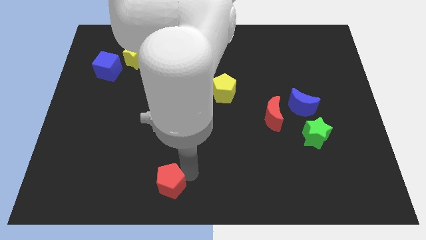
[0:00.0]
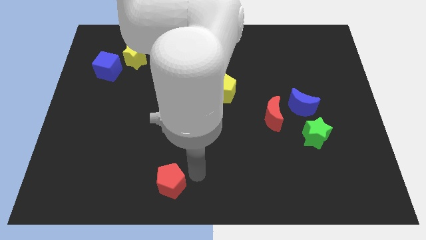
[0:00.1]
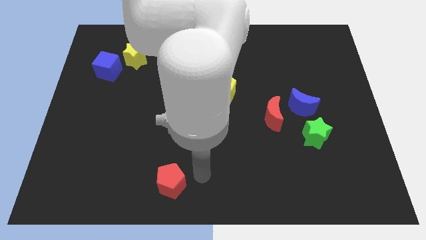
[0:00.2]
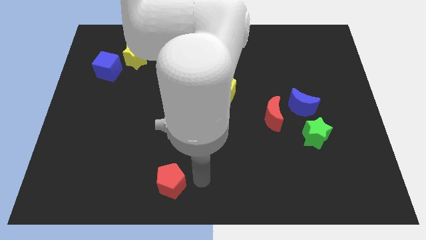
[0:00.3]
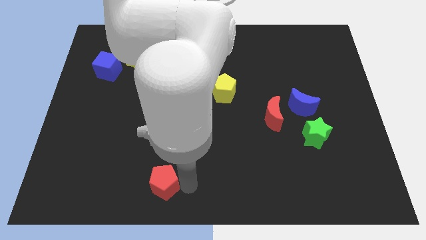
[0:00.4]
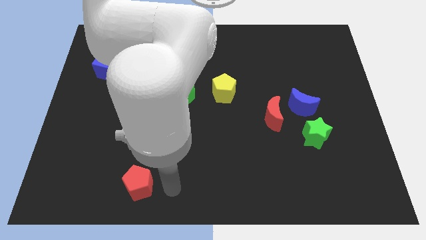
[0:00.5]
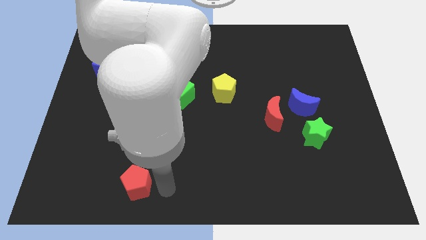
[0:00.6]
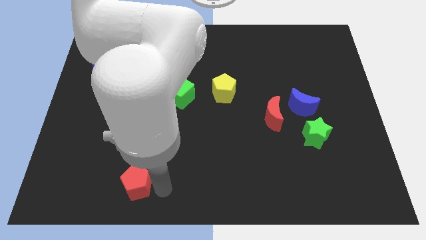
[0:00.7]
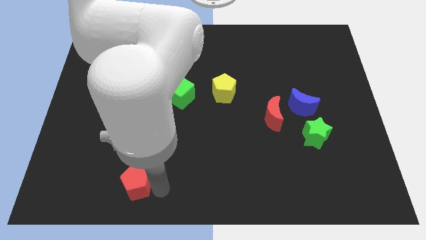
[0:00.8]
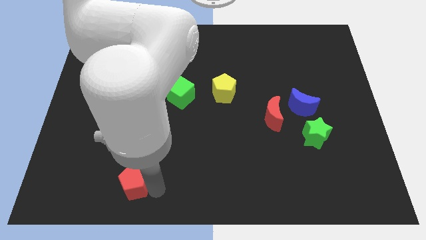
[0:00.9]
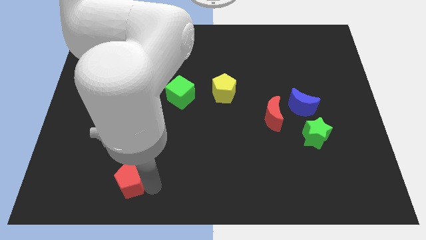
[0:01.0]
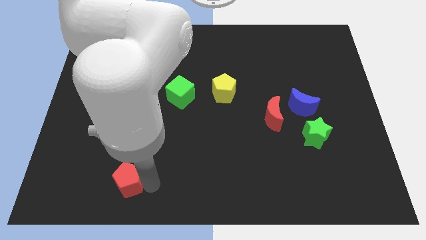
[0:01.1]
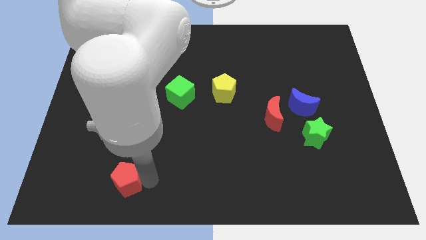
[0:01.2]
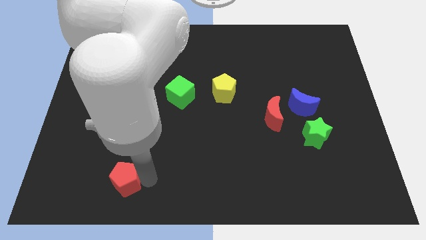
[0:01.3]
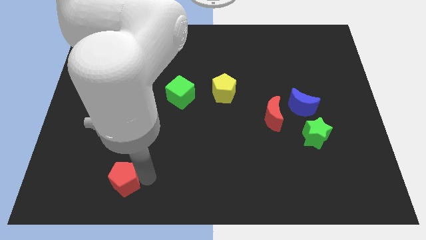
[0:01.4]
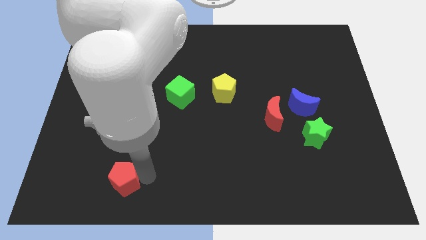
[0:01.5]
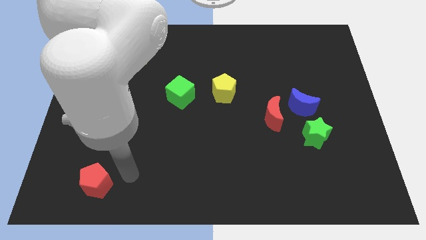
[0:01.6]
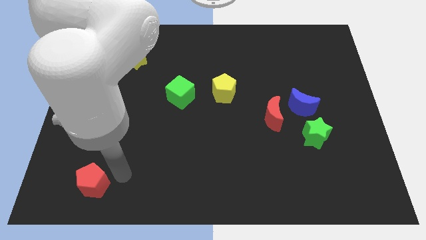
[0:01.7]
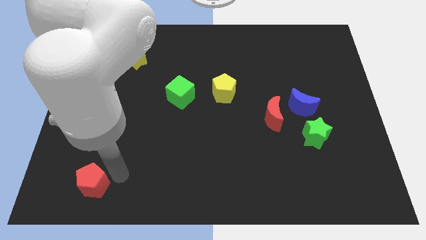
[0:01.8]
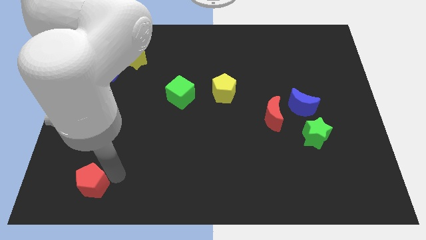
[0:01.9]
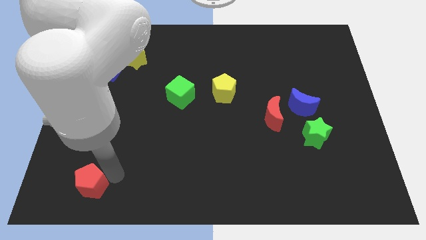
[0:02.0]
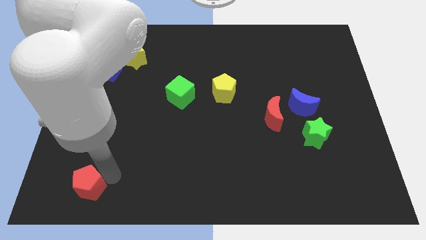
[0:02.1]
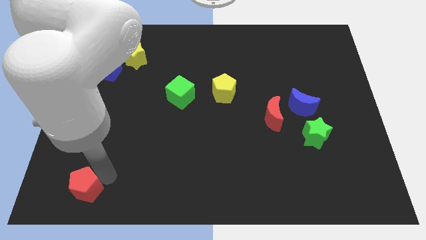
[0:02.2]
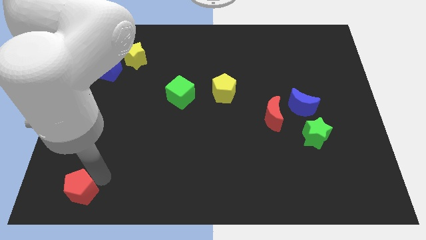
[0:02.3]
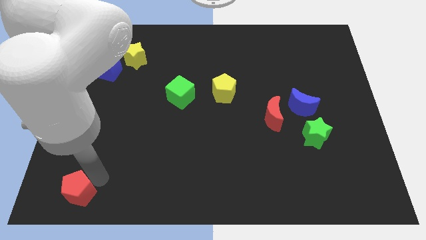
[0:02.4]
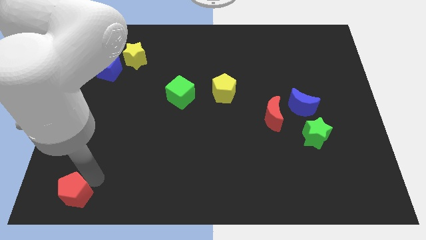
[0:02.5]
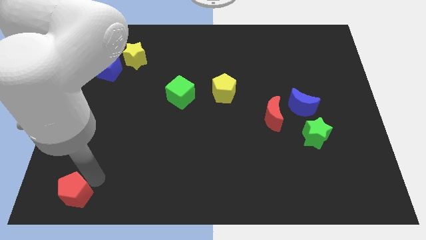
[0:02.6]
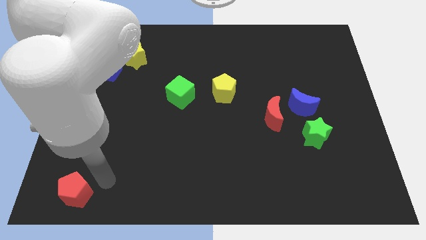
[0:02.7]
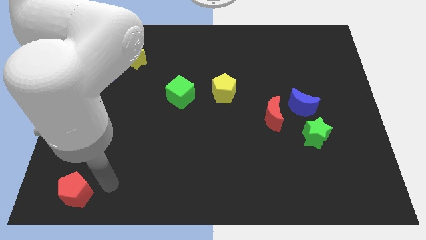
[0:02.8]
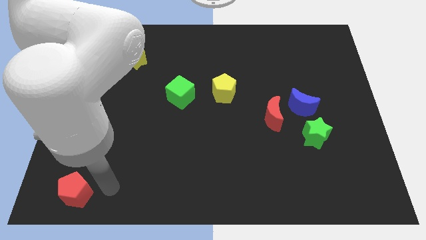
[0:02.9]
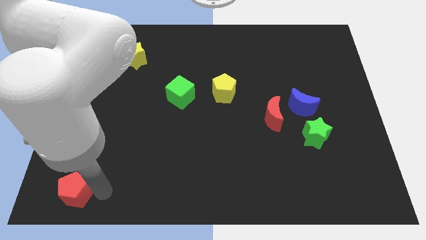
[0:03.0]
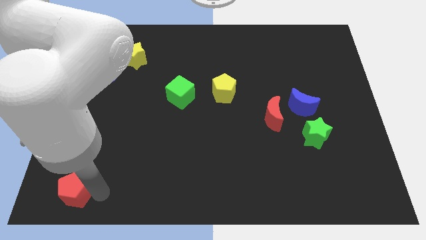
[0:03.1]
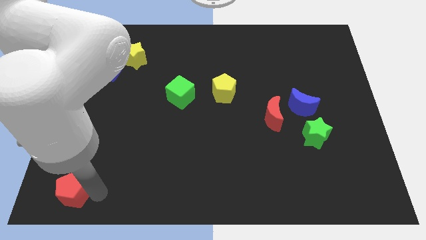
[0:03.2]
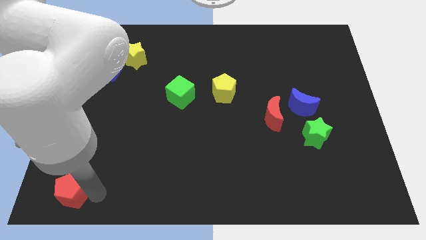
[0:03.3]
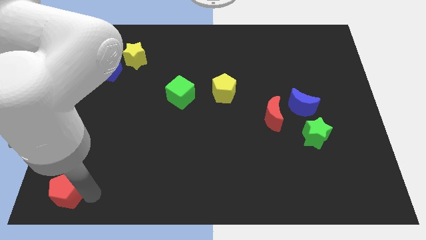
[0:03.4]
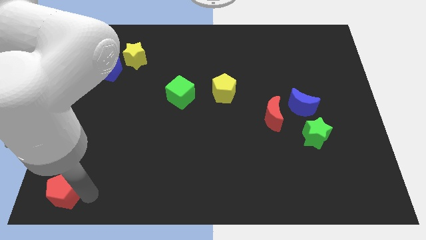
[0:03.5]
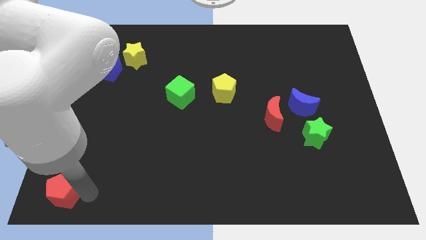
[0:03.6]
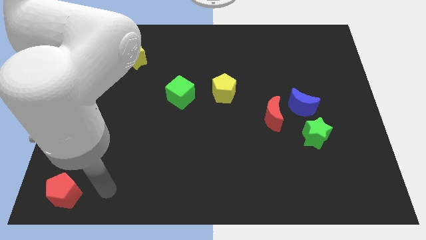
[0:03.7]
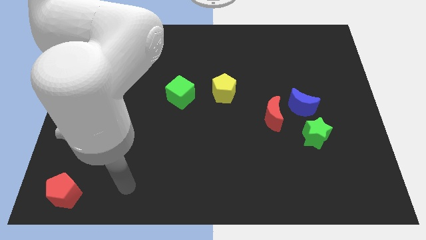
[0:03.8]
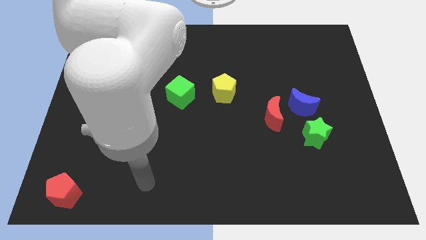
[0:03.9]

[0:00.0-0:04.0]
place the red pentagon to the bottom left corner of the board

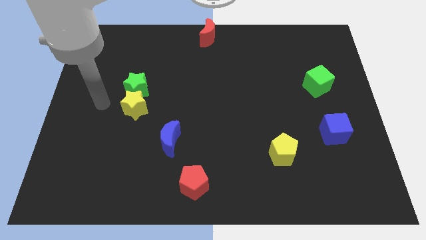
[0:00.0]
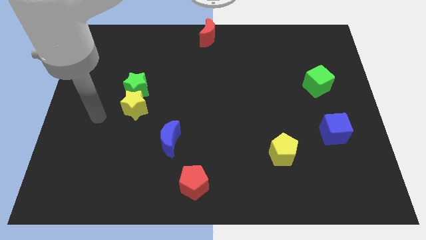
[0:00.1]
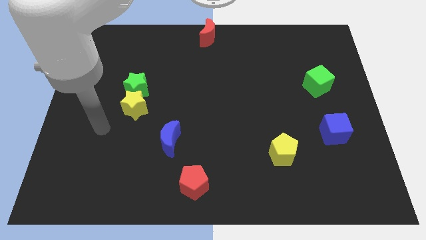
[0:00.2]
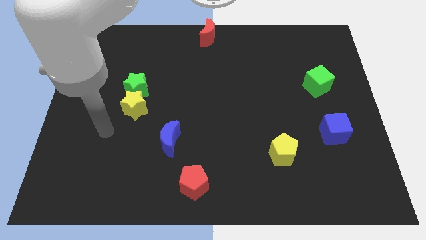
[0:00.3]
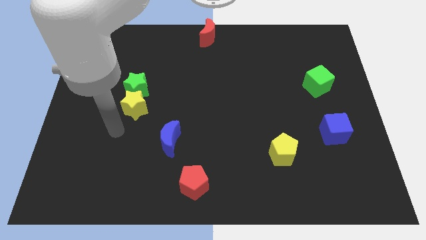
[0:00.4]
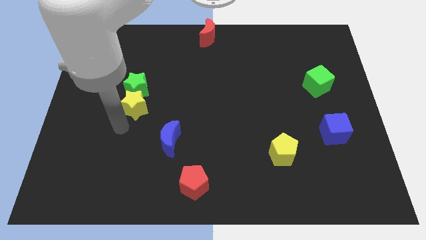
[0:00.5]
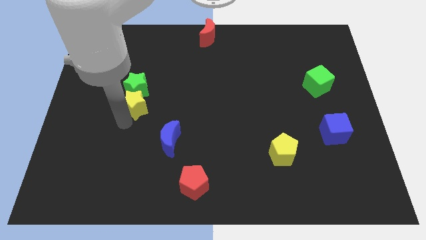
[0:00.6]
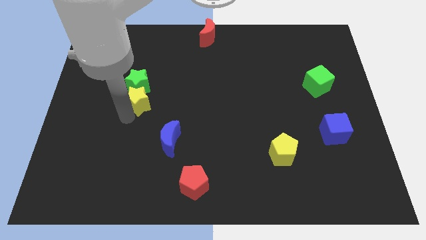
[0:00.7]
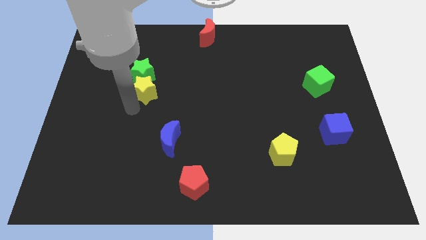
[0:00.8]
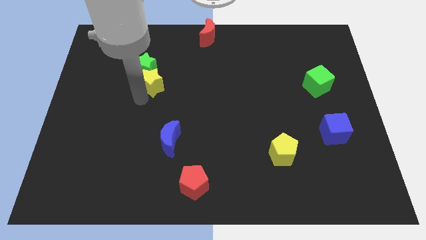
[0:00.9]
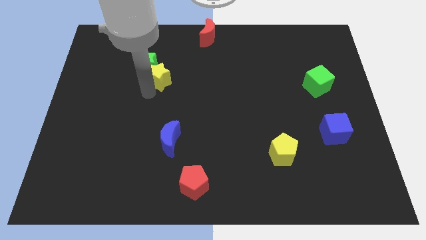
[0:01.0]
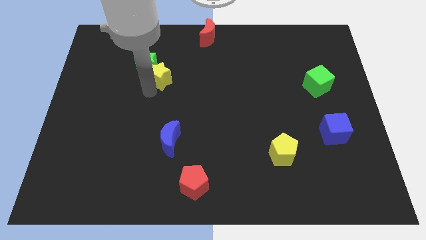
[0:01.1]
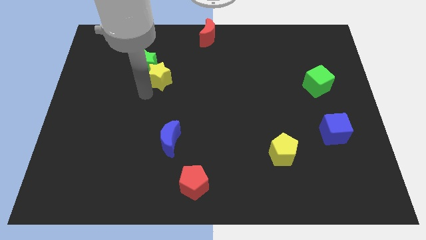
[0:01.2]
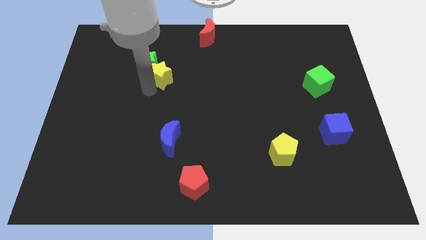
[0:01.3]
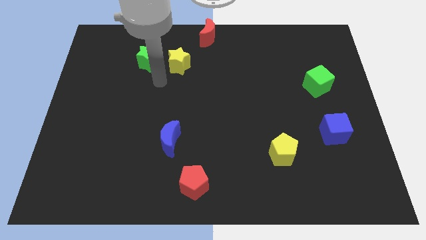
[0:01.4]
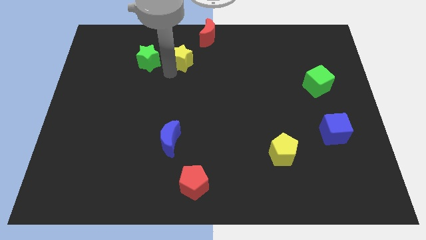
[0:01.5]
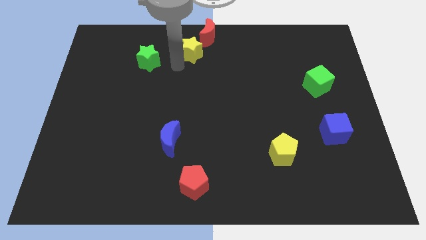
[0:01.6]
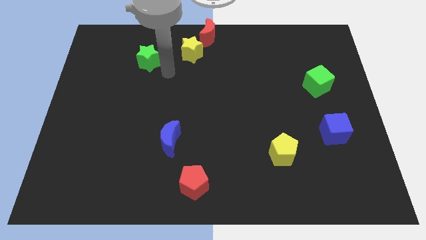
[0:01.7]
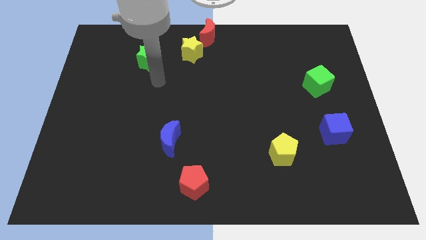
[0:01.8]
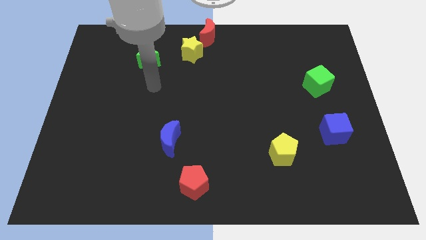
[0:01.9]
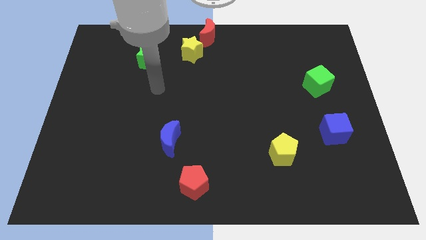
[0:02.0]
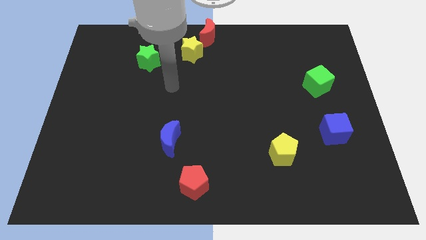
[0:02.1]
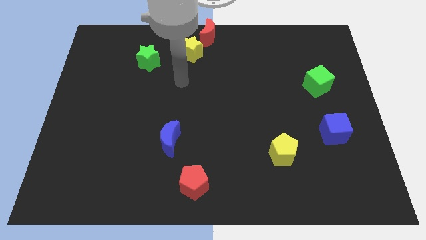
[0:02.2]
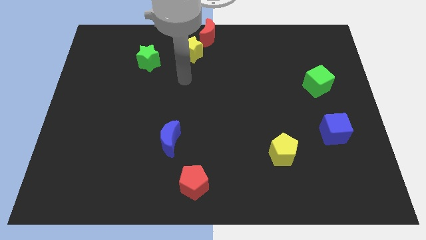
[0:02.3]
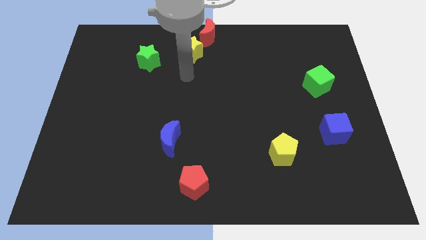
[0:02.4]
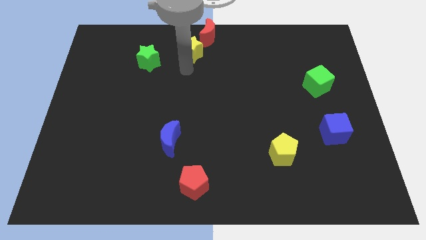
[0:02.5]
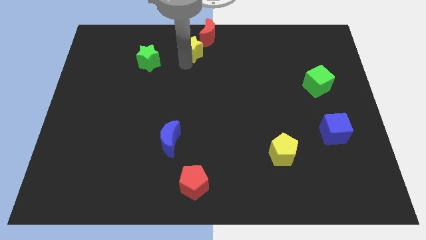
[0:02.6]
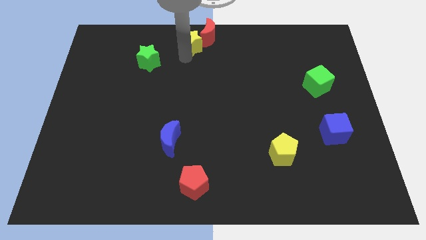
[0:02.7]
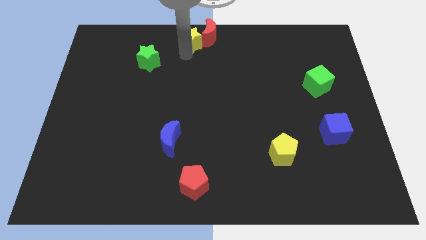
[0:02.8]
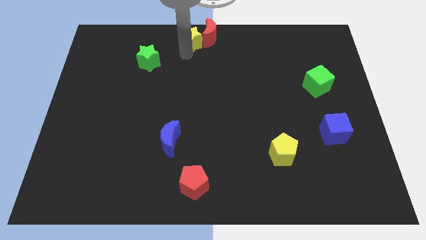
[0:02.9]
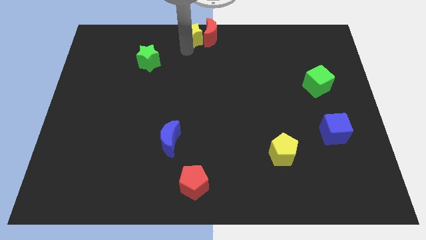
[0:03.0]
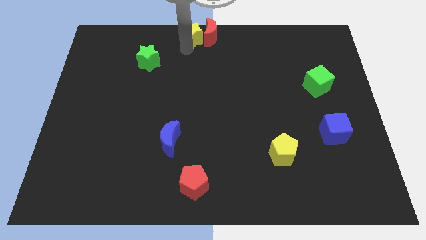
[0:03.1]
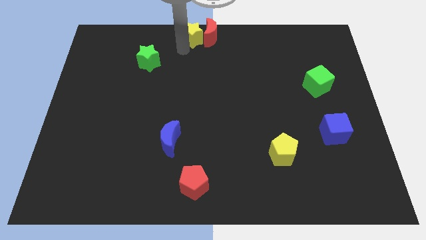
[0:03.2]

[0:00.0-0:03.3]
place the yellow star left to the red crescent

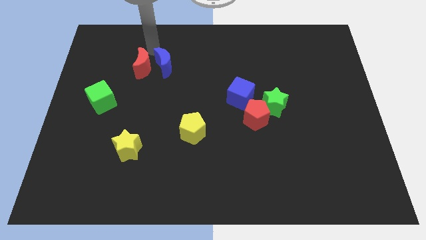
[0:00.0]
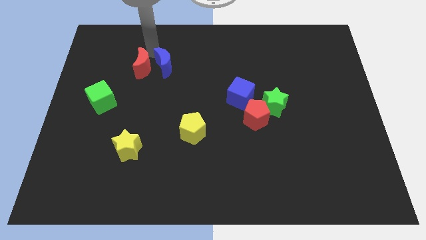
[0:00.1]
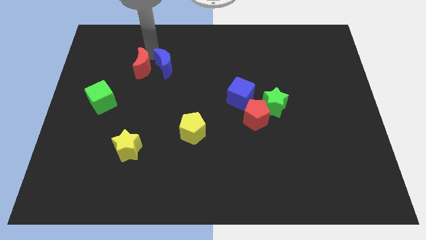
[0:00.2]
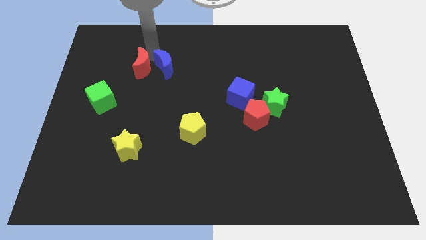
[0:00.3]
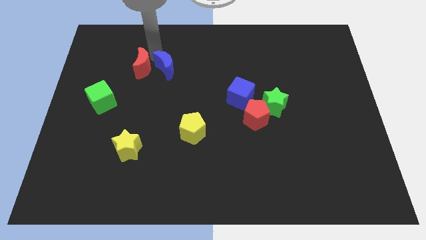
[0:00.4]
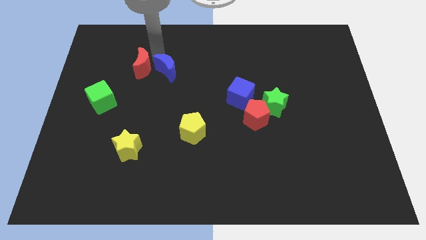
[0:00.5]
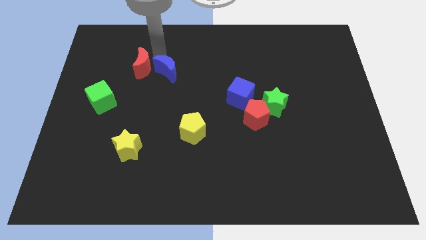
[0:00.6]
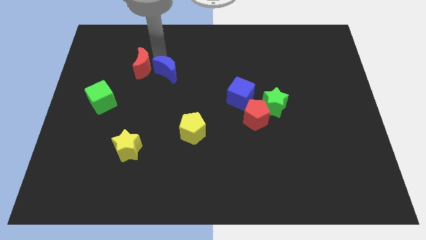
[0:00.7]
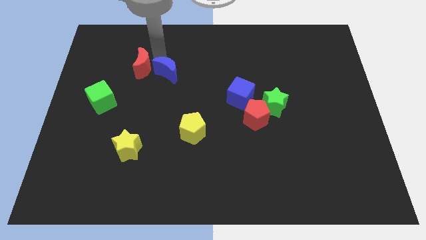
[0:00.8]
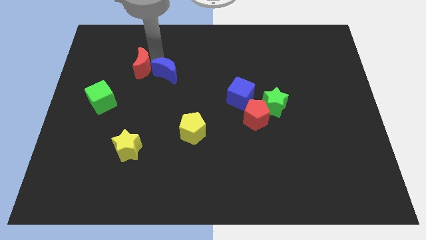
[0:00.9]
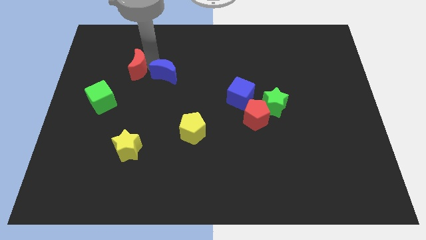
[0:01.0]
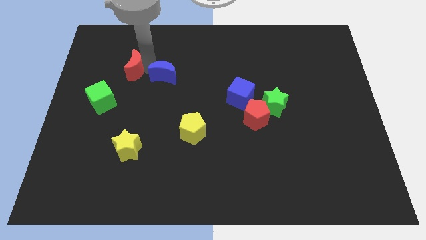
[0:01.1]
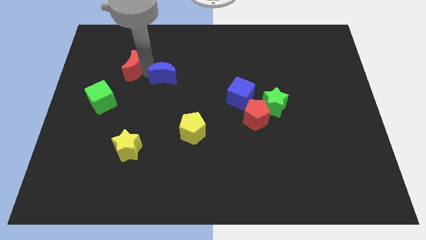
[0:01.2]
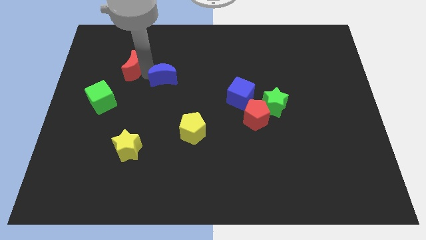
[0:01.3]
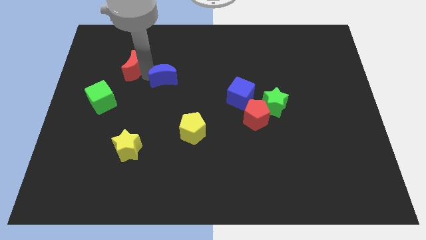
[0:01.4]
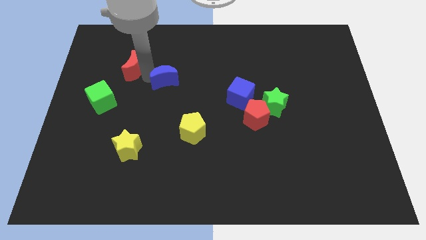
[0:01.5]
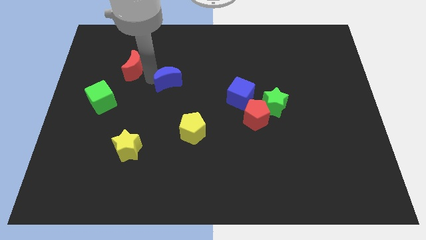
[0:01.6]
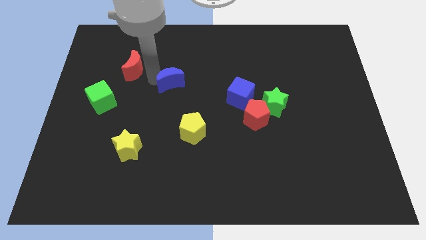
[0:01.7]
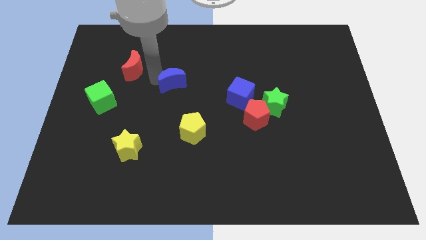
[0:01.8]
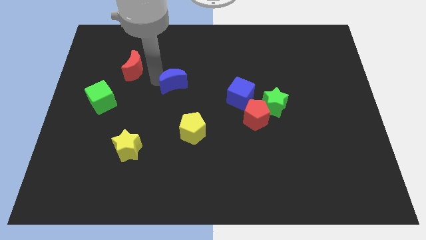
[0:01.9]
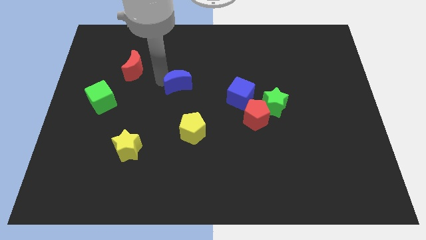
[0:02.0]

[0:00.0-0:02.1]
separate blue and red moons
